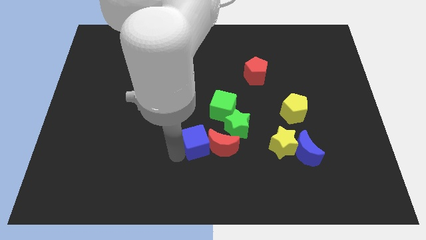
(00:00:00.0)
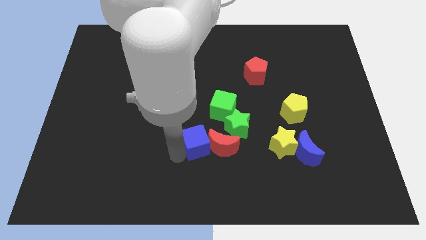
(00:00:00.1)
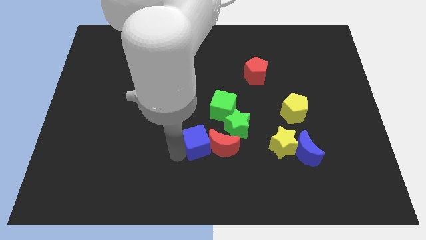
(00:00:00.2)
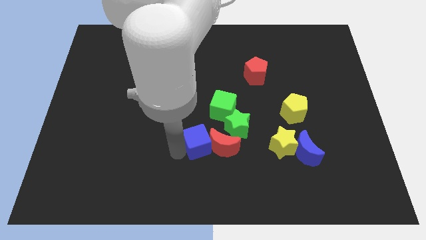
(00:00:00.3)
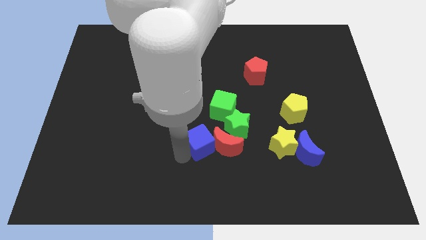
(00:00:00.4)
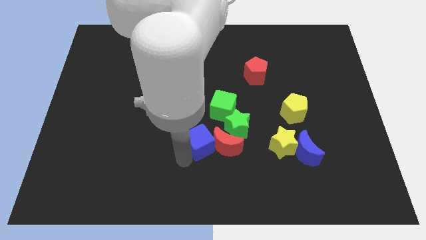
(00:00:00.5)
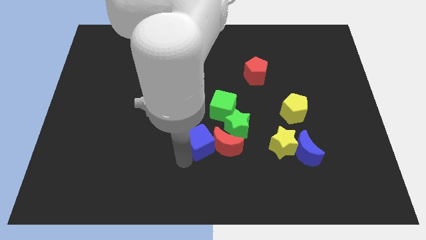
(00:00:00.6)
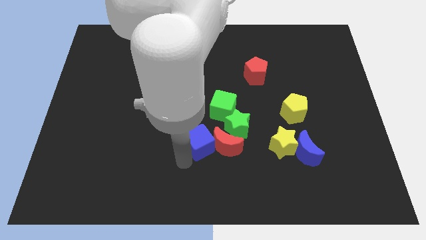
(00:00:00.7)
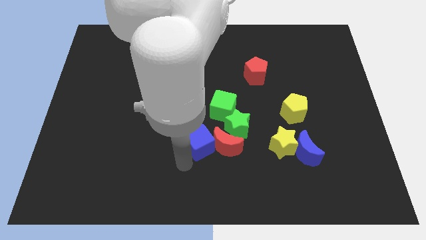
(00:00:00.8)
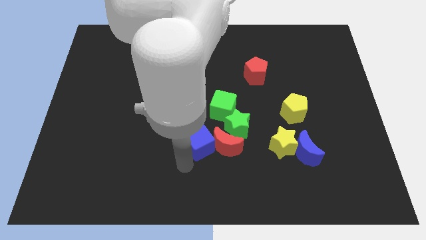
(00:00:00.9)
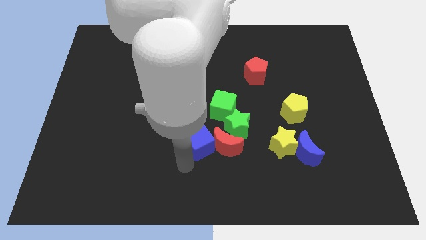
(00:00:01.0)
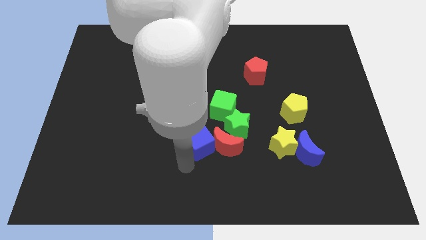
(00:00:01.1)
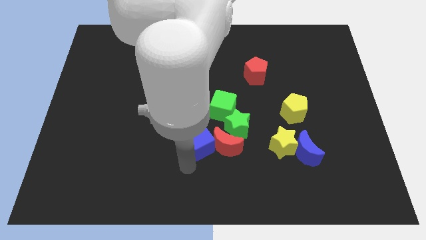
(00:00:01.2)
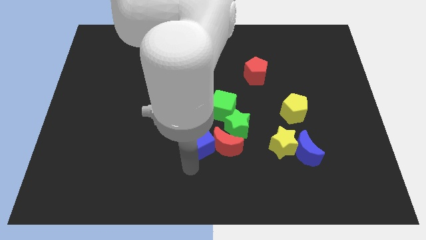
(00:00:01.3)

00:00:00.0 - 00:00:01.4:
point your arm below blue cube

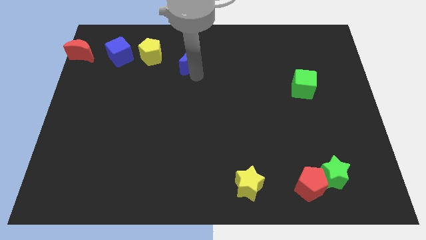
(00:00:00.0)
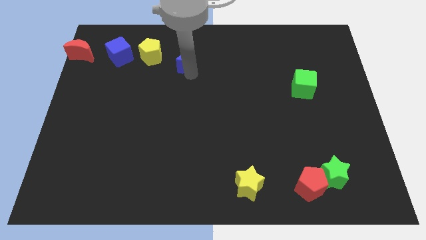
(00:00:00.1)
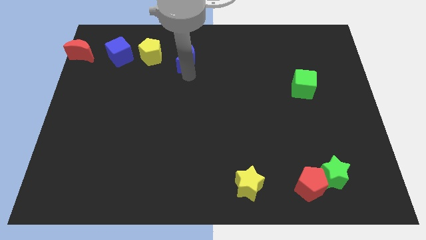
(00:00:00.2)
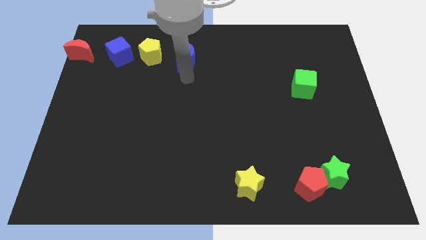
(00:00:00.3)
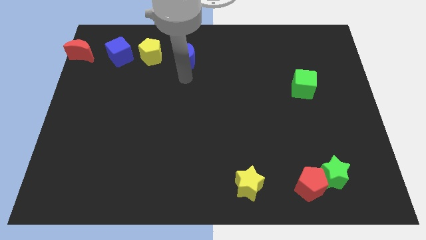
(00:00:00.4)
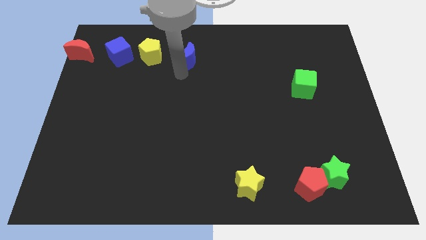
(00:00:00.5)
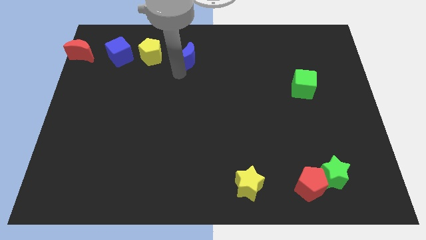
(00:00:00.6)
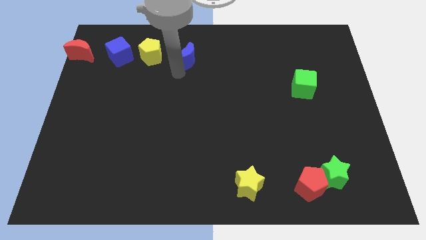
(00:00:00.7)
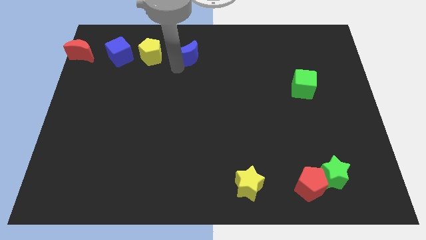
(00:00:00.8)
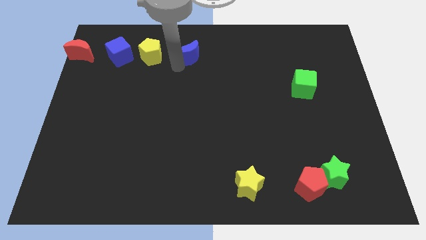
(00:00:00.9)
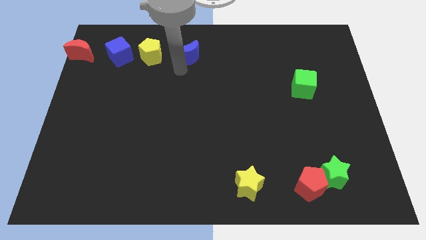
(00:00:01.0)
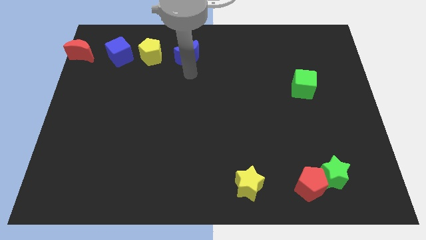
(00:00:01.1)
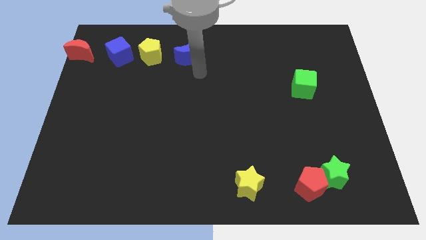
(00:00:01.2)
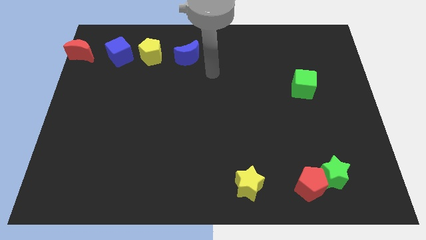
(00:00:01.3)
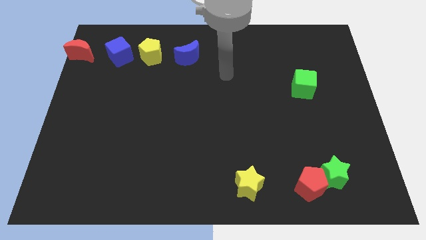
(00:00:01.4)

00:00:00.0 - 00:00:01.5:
push the blue crescent slightly towards up

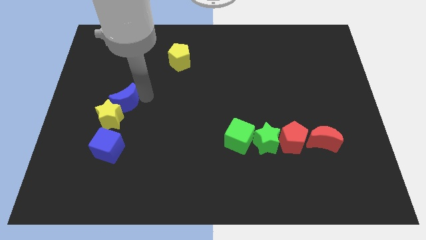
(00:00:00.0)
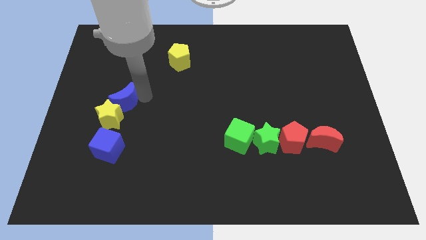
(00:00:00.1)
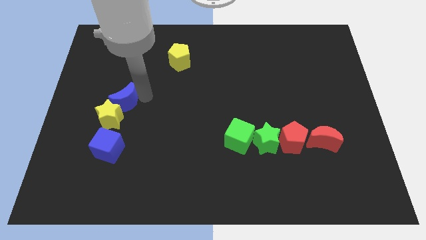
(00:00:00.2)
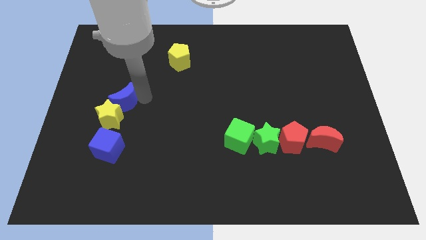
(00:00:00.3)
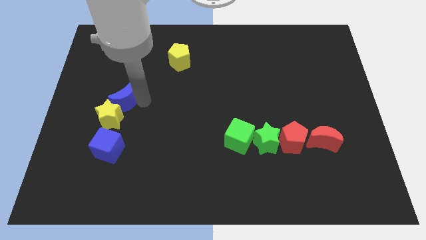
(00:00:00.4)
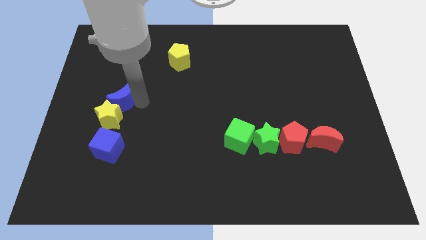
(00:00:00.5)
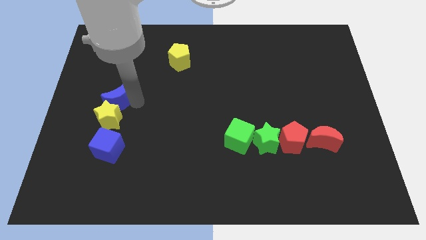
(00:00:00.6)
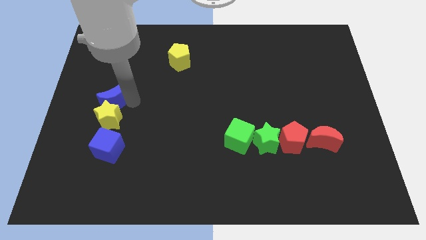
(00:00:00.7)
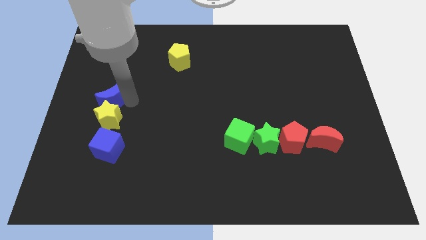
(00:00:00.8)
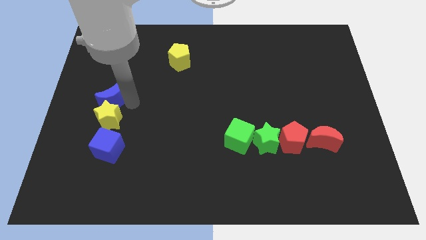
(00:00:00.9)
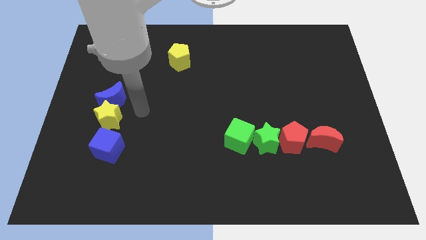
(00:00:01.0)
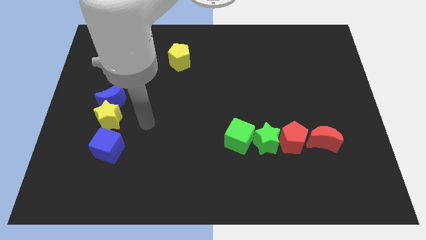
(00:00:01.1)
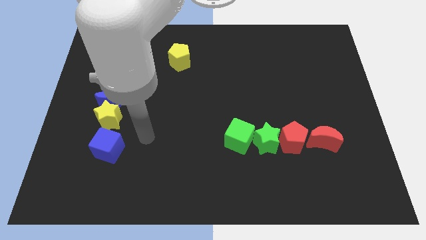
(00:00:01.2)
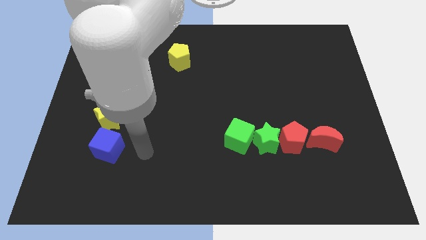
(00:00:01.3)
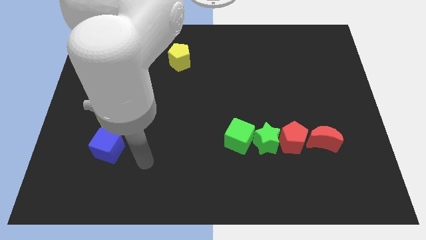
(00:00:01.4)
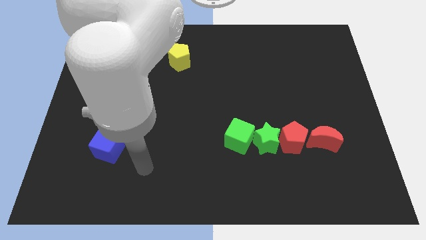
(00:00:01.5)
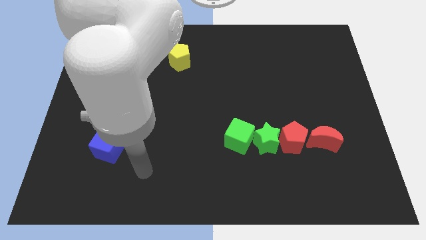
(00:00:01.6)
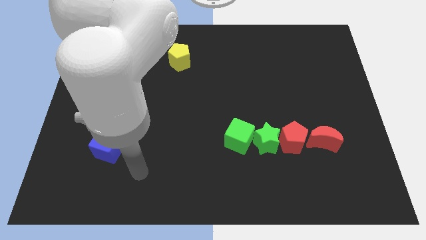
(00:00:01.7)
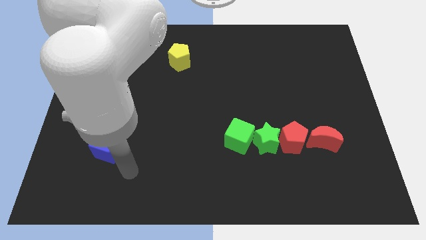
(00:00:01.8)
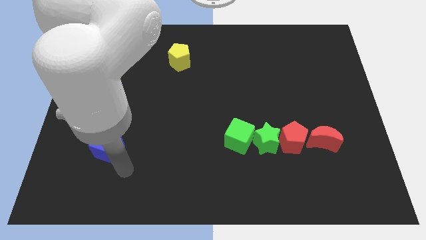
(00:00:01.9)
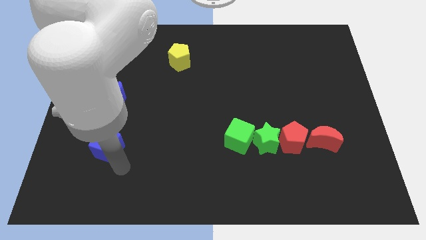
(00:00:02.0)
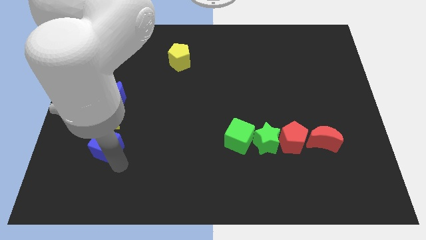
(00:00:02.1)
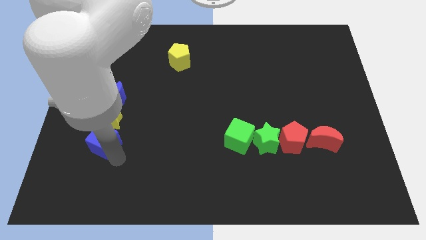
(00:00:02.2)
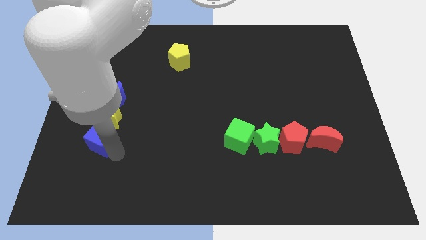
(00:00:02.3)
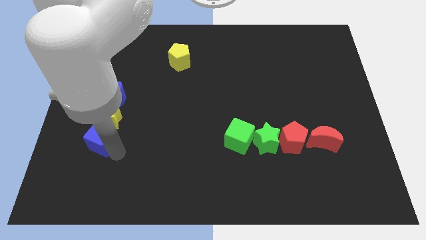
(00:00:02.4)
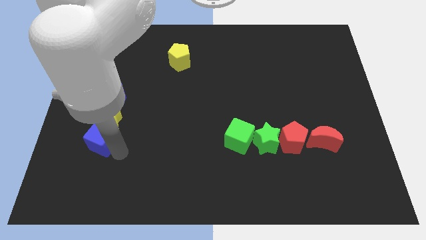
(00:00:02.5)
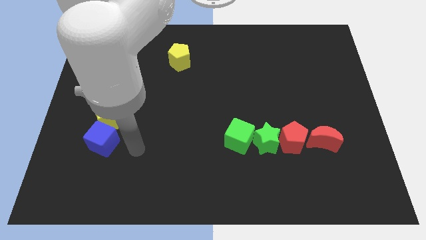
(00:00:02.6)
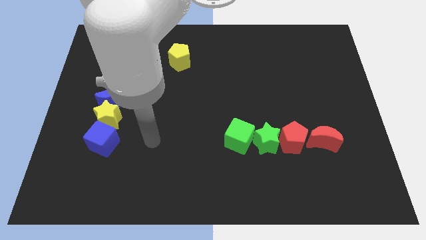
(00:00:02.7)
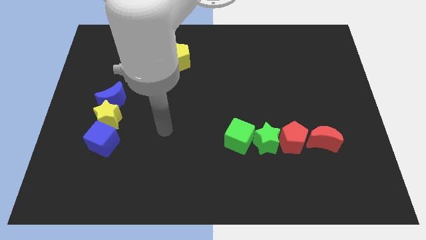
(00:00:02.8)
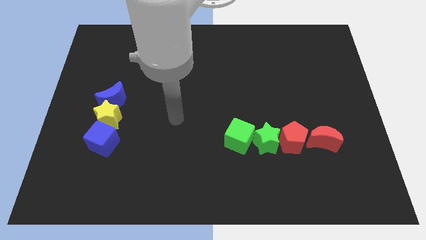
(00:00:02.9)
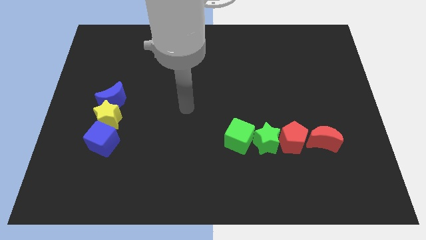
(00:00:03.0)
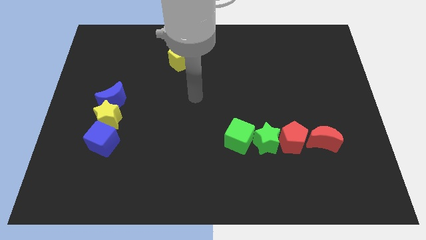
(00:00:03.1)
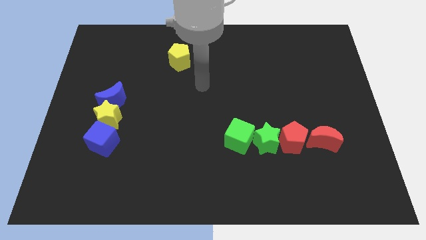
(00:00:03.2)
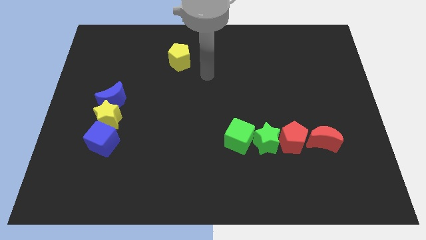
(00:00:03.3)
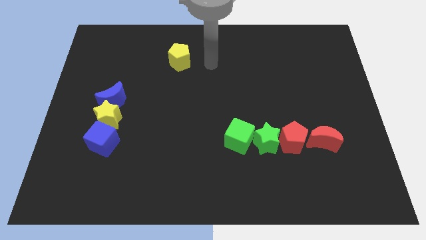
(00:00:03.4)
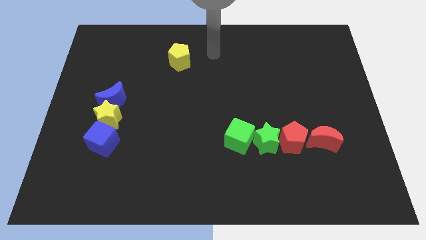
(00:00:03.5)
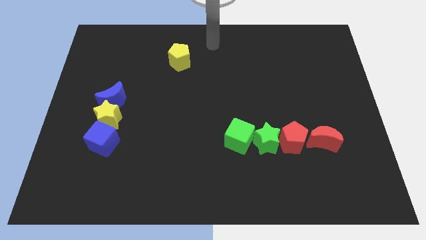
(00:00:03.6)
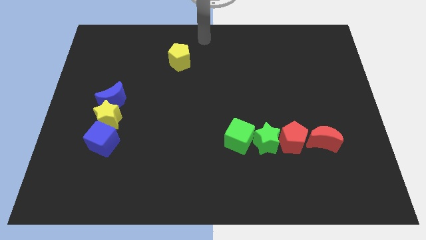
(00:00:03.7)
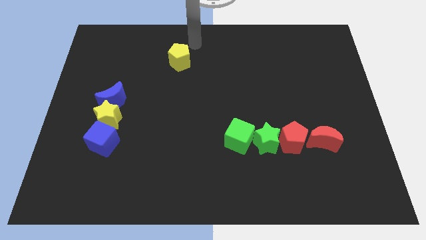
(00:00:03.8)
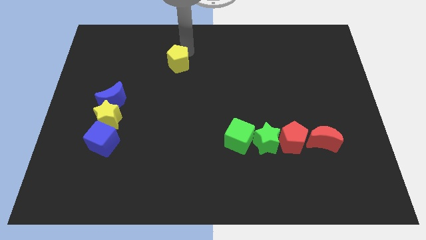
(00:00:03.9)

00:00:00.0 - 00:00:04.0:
slightly push the blue cube close to the yellow star

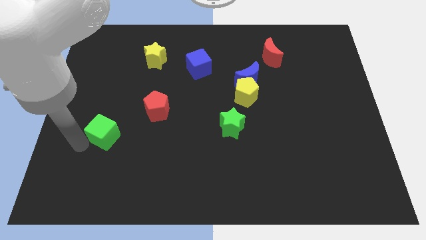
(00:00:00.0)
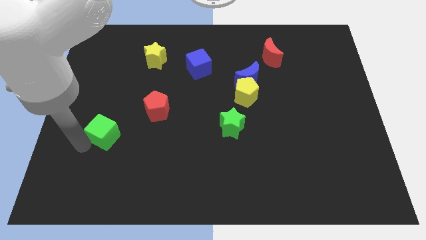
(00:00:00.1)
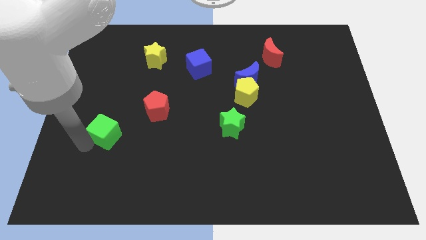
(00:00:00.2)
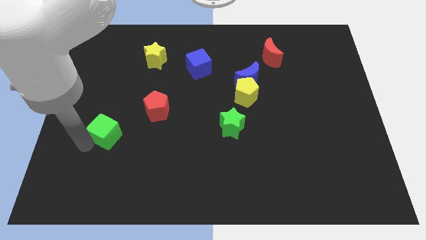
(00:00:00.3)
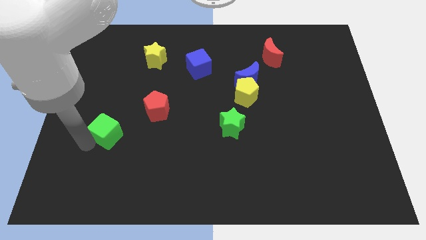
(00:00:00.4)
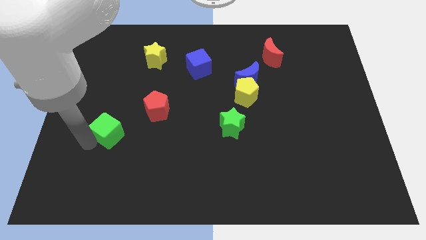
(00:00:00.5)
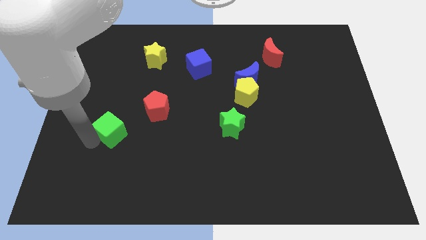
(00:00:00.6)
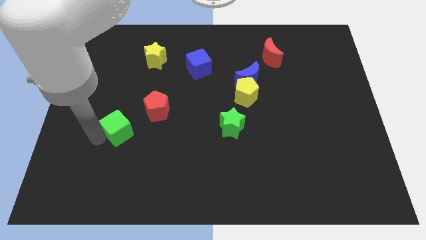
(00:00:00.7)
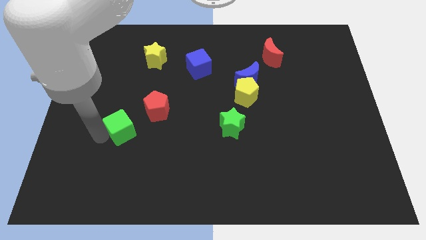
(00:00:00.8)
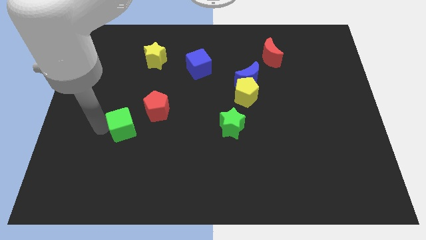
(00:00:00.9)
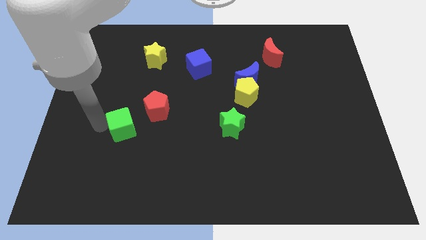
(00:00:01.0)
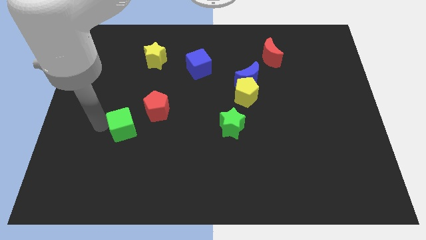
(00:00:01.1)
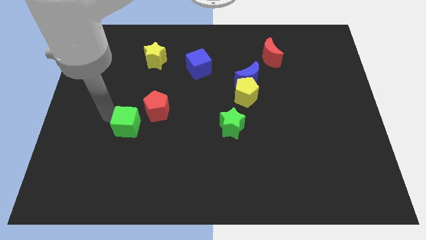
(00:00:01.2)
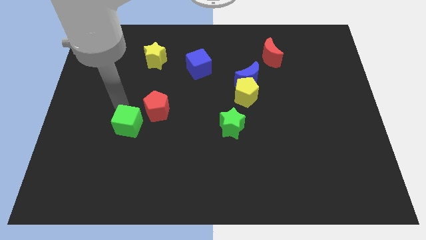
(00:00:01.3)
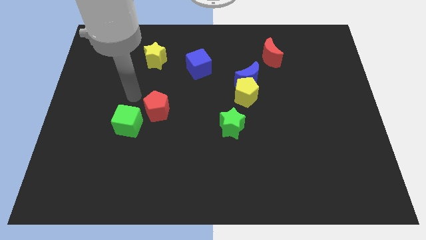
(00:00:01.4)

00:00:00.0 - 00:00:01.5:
slightly push the green cube diagonal left of red pentagon

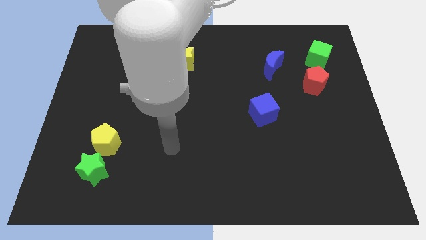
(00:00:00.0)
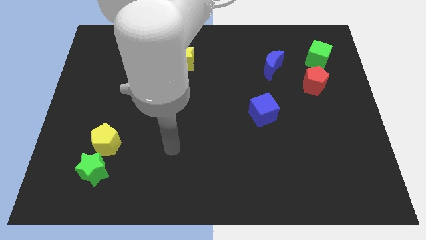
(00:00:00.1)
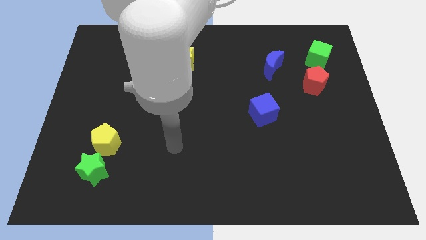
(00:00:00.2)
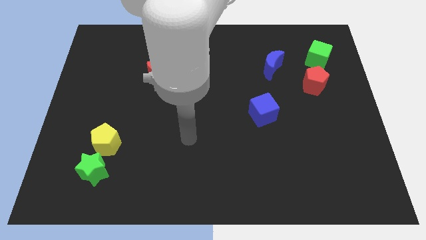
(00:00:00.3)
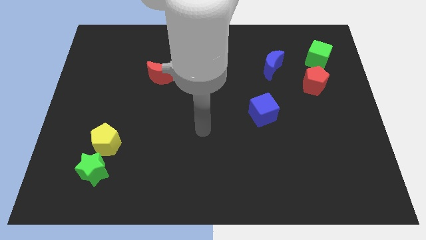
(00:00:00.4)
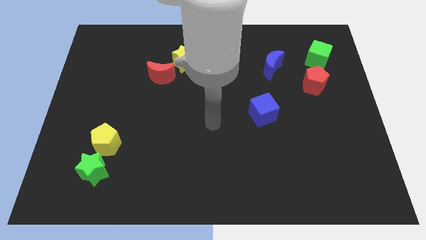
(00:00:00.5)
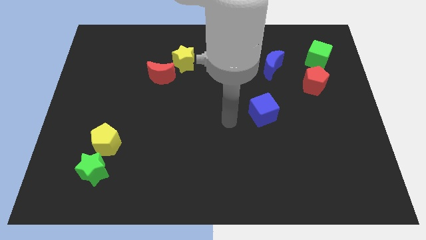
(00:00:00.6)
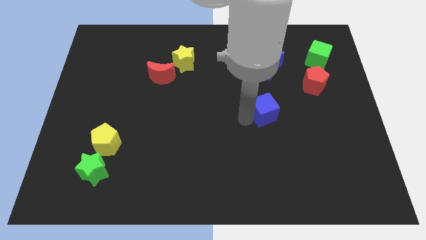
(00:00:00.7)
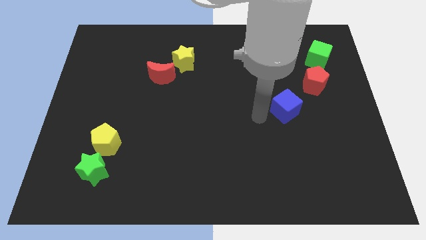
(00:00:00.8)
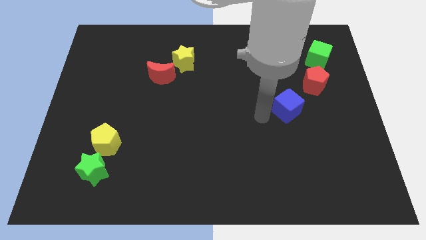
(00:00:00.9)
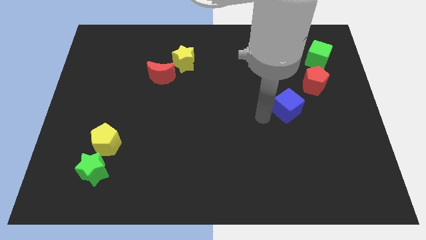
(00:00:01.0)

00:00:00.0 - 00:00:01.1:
slide blue cube towards red pentagon
